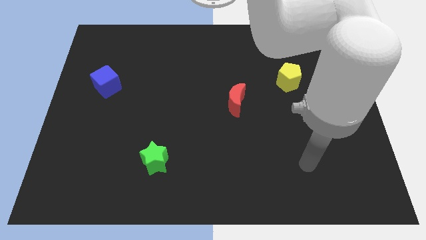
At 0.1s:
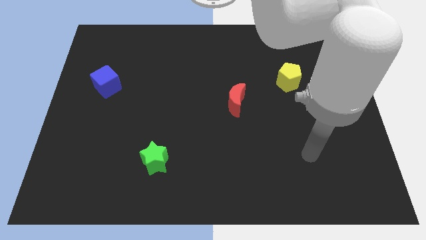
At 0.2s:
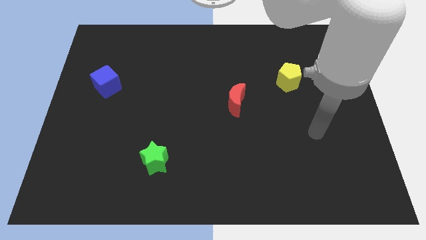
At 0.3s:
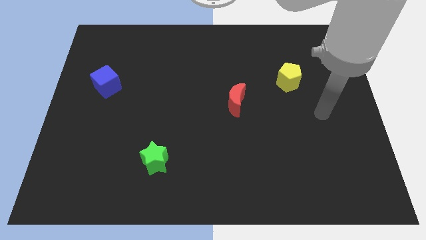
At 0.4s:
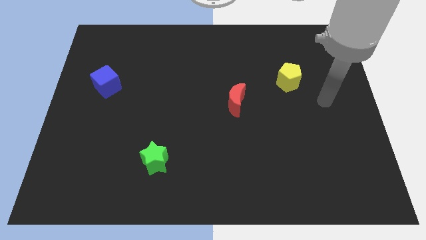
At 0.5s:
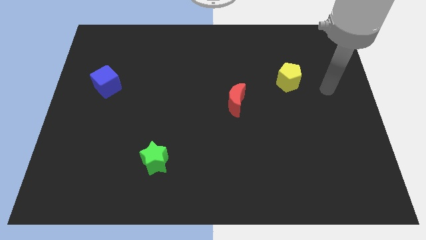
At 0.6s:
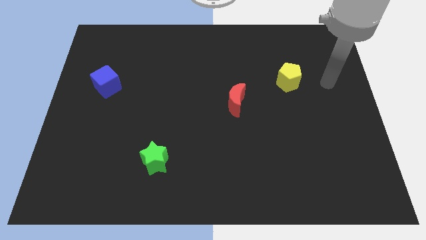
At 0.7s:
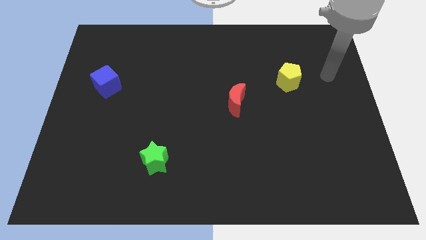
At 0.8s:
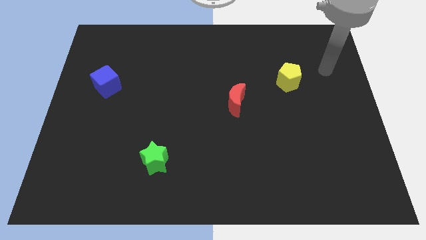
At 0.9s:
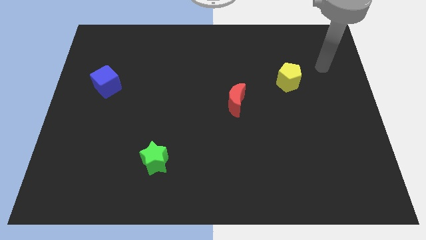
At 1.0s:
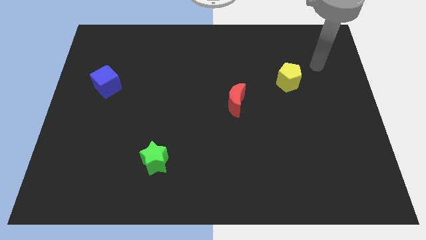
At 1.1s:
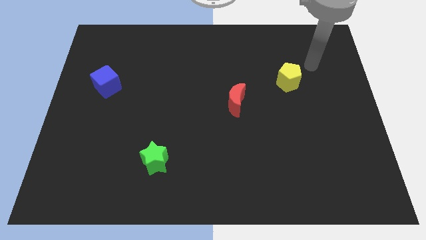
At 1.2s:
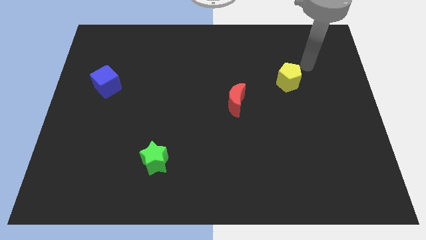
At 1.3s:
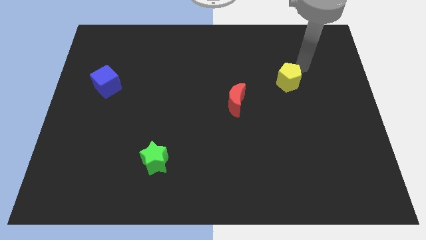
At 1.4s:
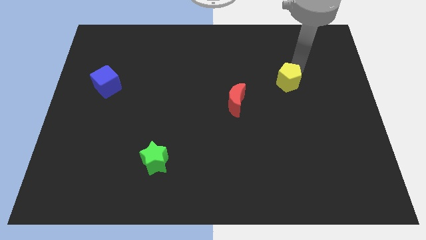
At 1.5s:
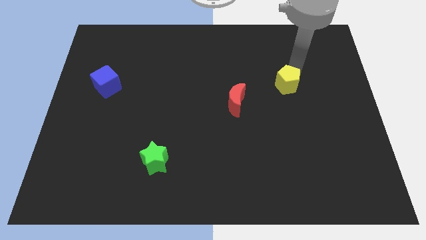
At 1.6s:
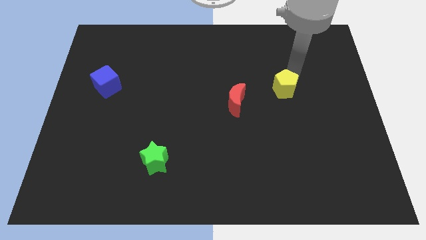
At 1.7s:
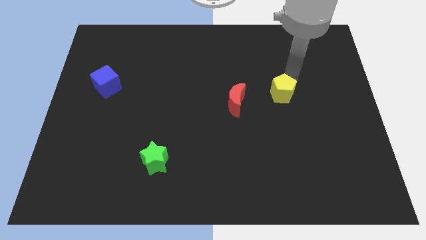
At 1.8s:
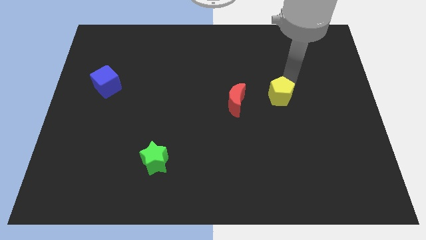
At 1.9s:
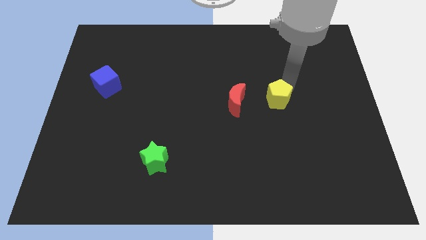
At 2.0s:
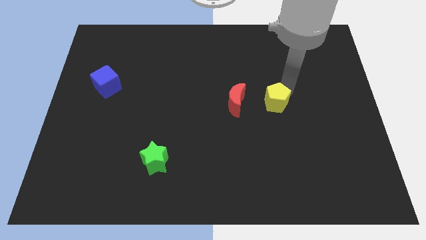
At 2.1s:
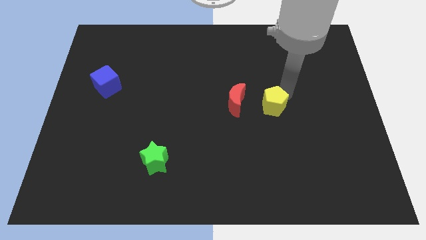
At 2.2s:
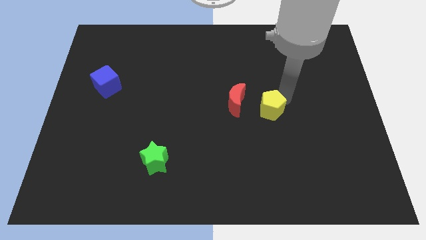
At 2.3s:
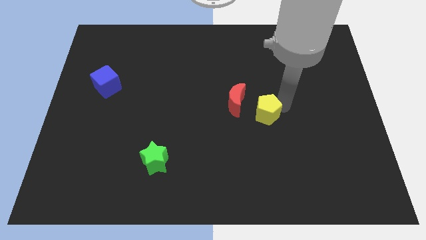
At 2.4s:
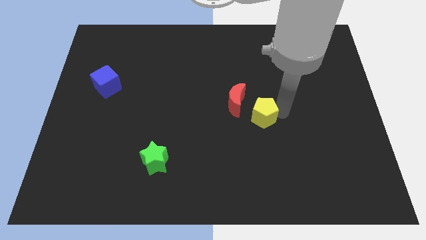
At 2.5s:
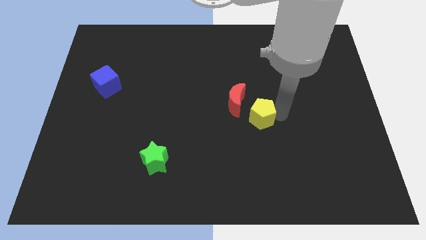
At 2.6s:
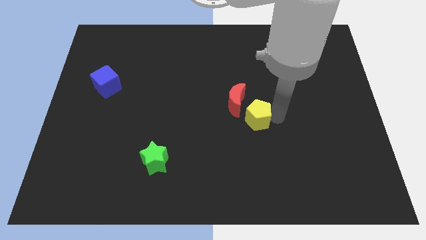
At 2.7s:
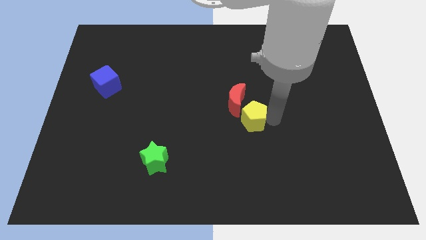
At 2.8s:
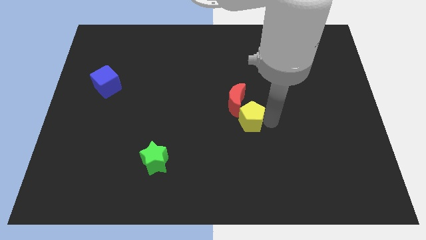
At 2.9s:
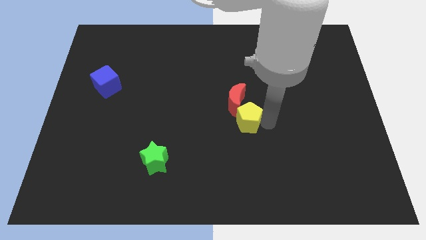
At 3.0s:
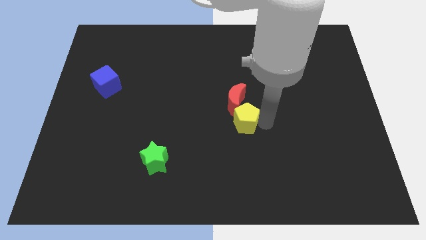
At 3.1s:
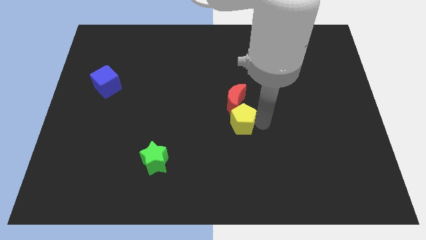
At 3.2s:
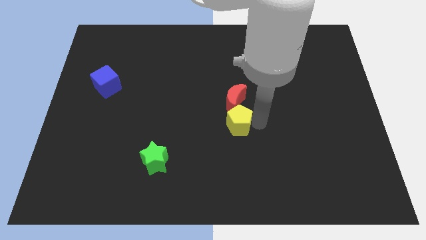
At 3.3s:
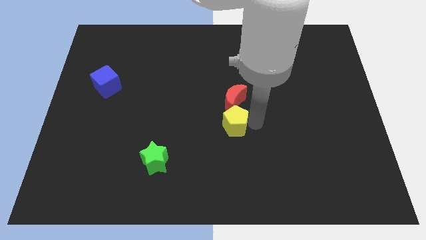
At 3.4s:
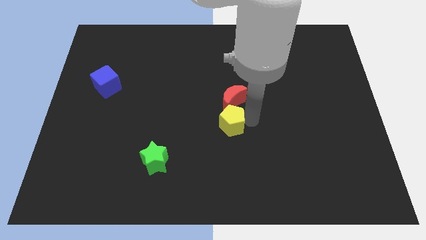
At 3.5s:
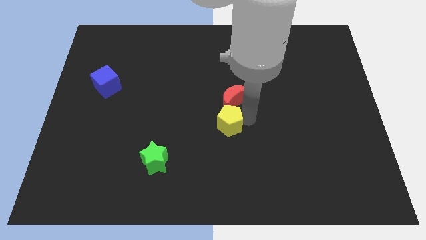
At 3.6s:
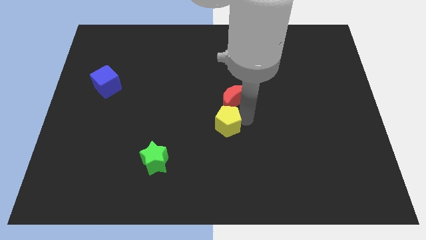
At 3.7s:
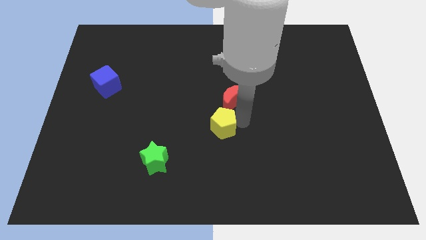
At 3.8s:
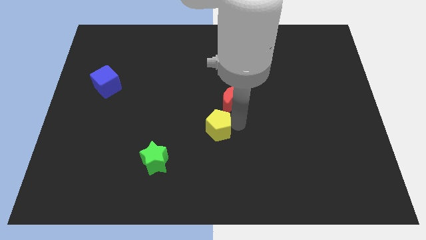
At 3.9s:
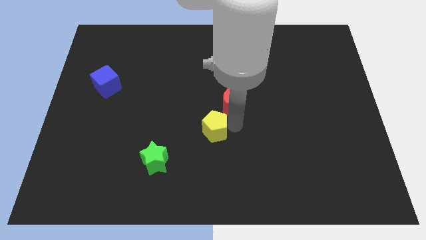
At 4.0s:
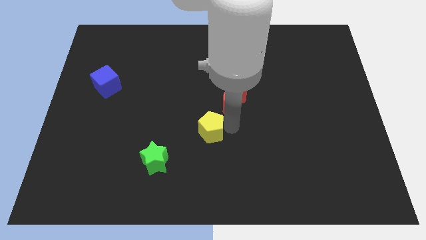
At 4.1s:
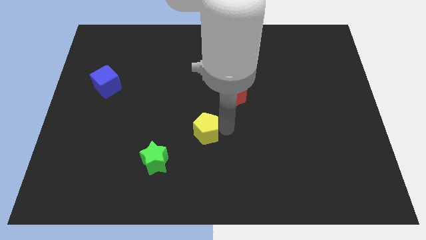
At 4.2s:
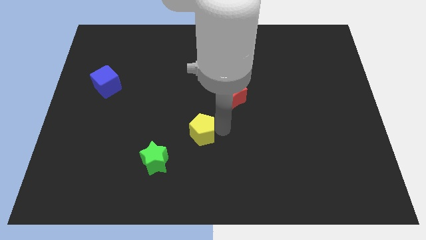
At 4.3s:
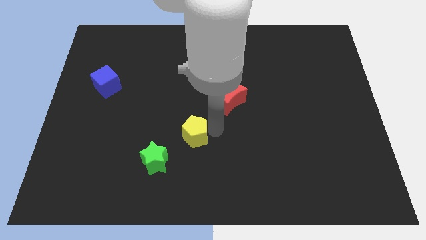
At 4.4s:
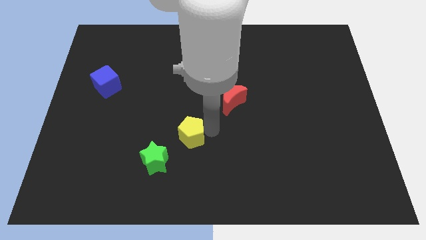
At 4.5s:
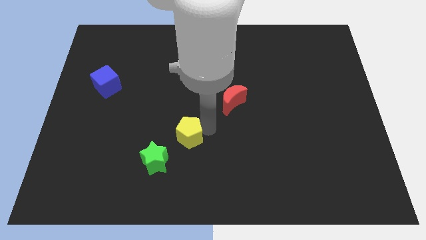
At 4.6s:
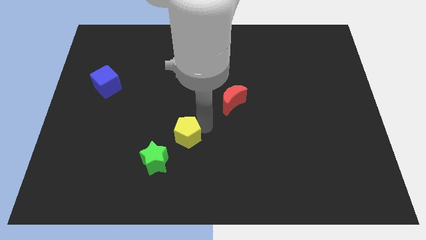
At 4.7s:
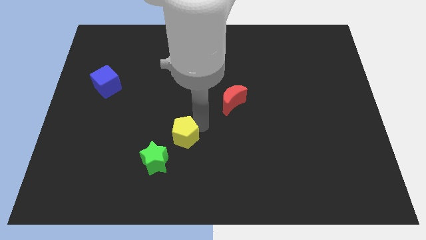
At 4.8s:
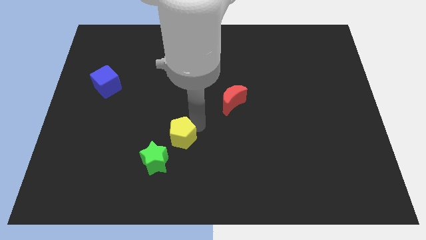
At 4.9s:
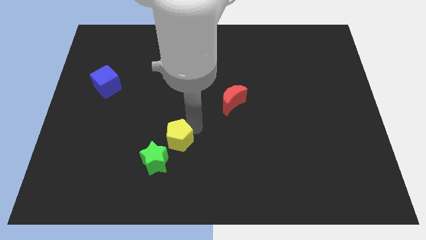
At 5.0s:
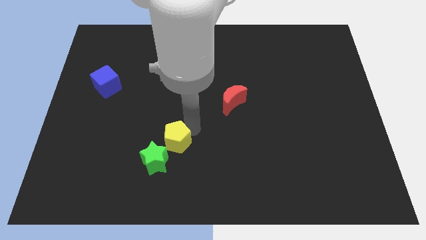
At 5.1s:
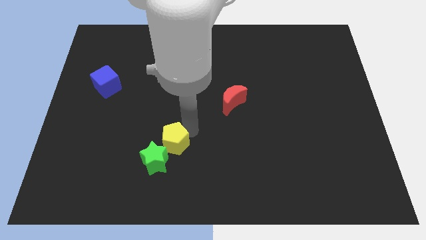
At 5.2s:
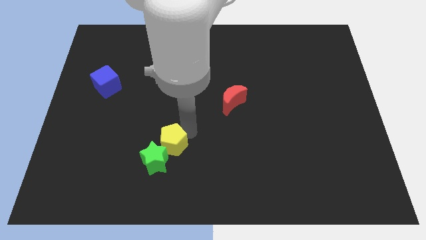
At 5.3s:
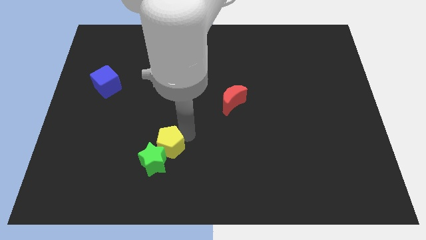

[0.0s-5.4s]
slide the yellow pentagon to the green star

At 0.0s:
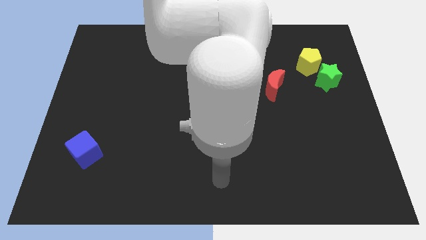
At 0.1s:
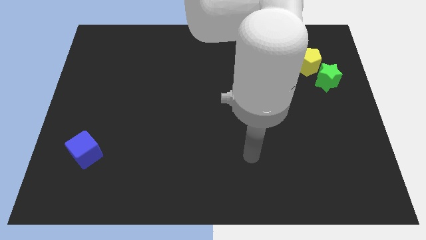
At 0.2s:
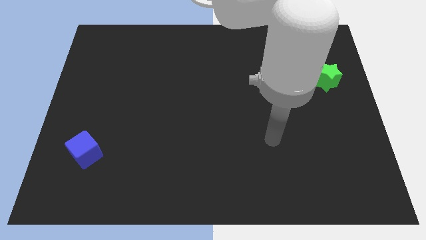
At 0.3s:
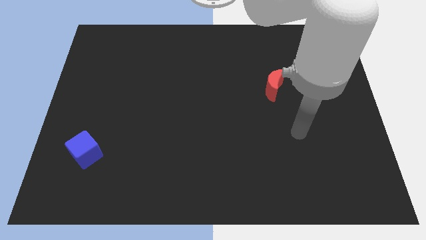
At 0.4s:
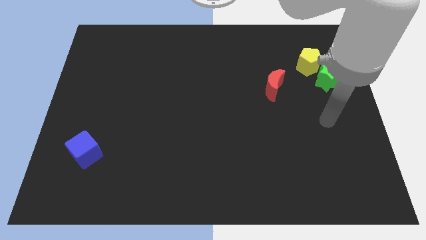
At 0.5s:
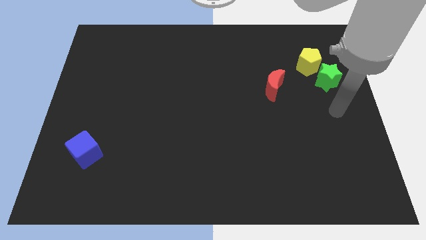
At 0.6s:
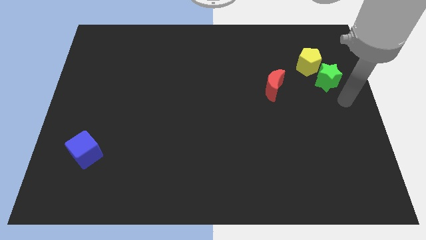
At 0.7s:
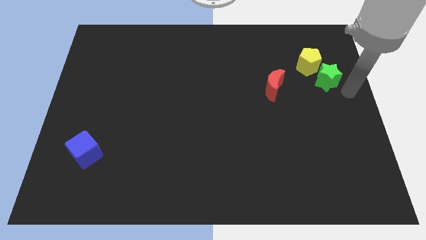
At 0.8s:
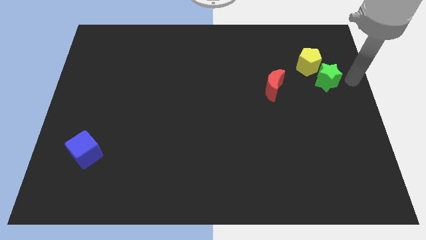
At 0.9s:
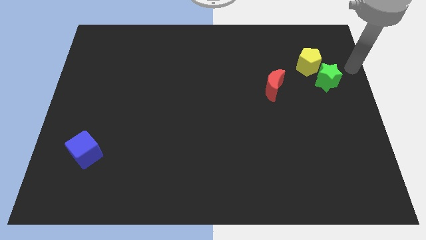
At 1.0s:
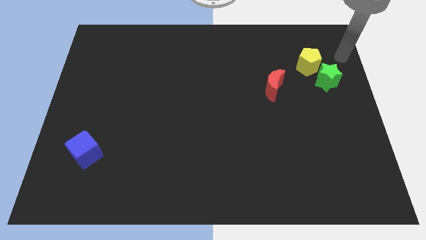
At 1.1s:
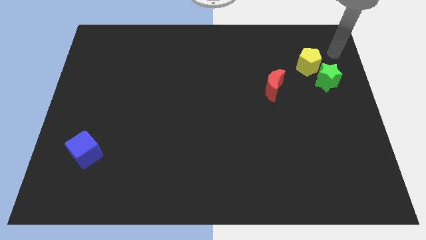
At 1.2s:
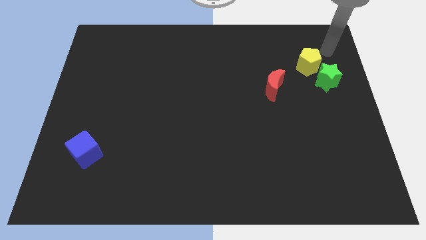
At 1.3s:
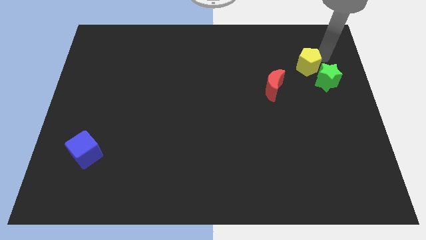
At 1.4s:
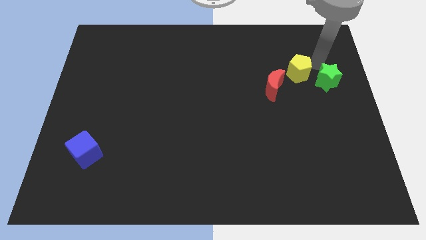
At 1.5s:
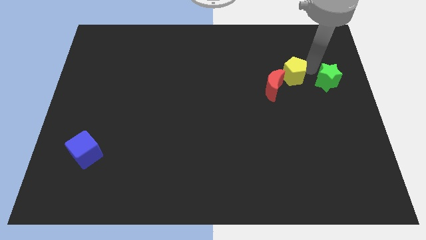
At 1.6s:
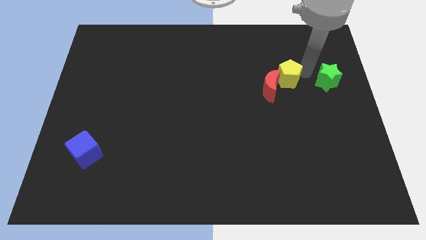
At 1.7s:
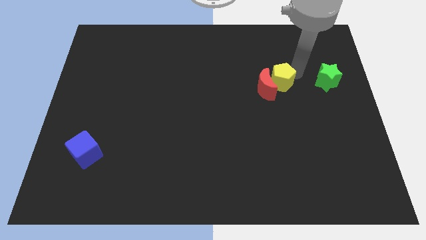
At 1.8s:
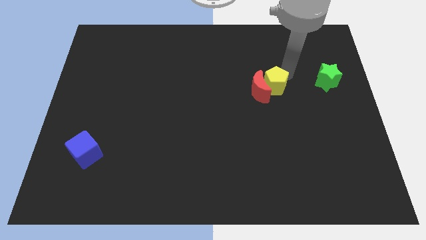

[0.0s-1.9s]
slide the pentagon to the moon

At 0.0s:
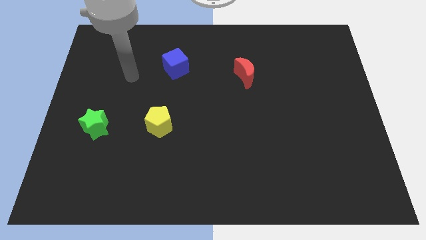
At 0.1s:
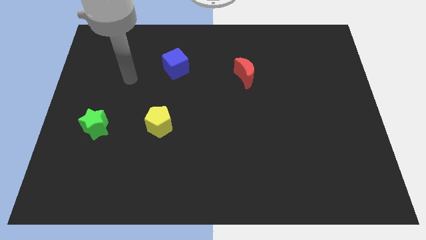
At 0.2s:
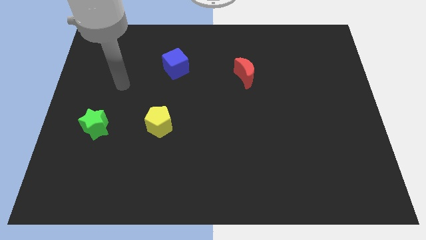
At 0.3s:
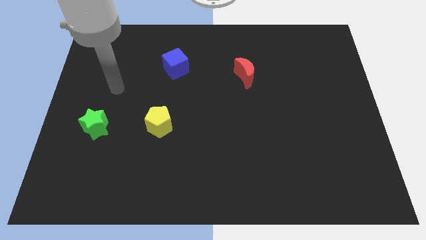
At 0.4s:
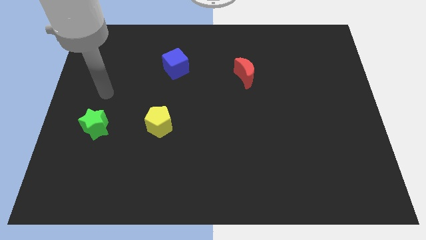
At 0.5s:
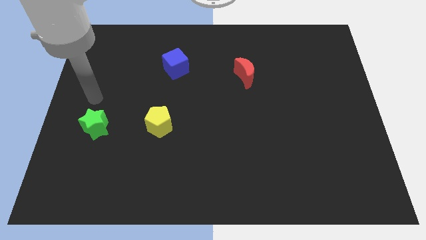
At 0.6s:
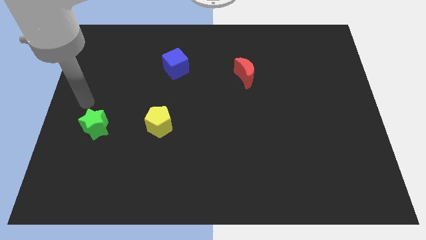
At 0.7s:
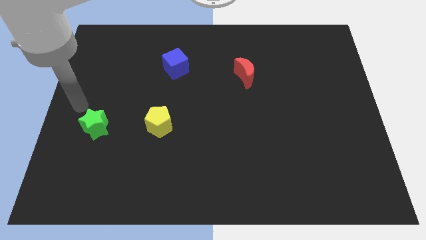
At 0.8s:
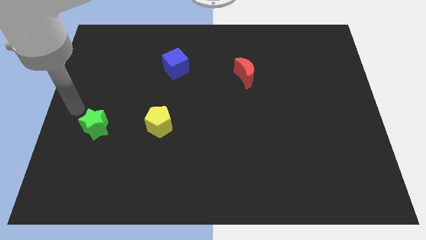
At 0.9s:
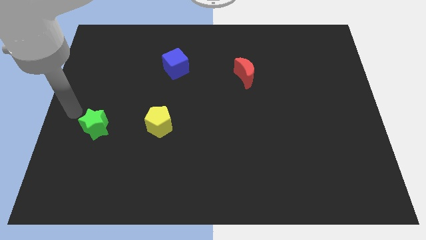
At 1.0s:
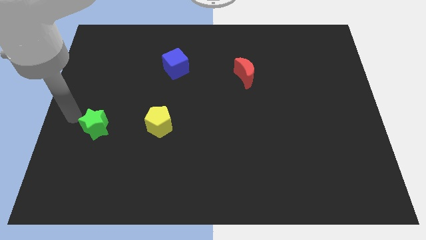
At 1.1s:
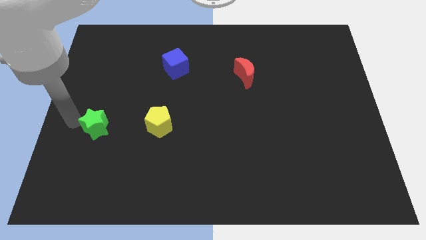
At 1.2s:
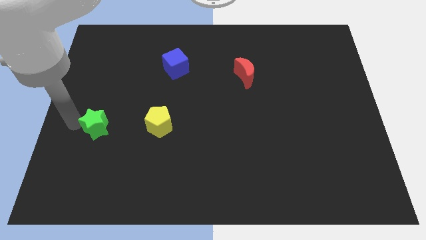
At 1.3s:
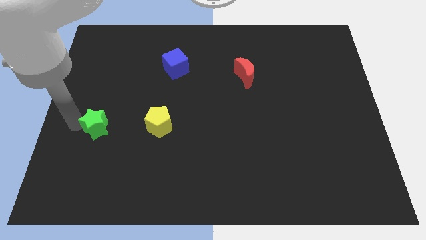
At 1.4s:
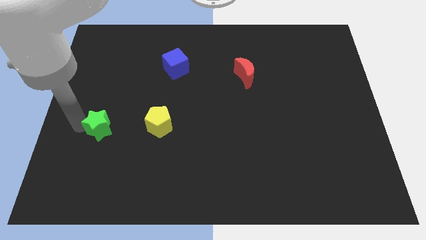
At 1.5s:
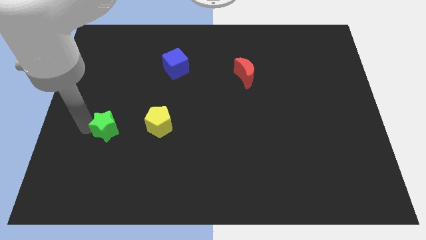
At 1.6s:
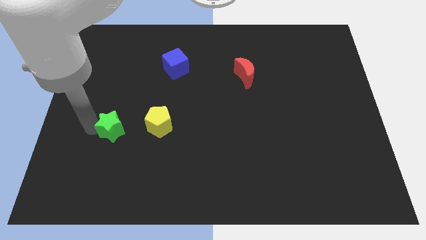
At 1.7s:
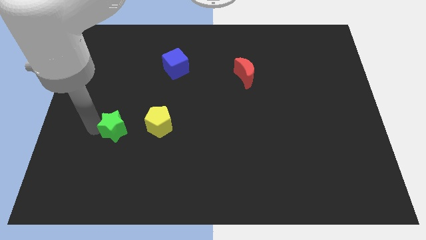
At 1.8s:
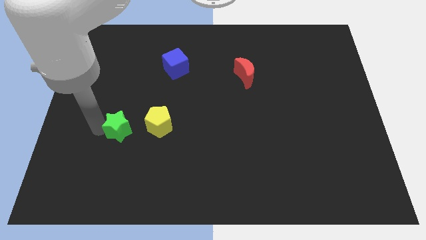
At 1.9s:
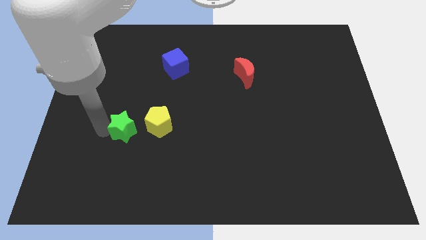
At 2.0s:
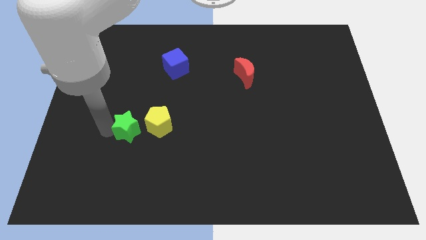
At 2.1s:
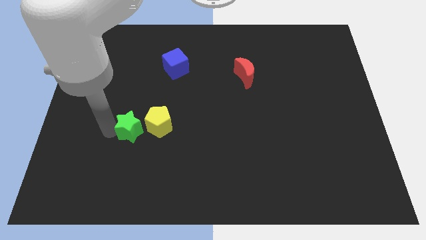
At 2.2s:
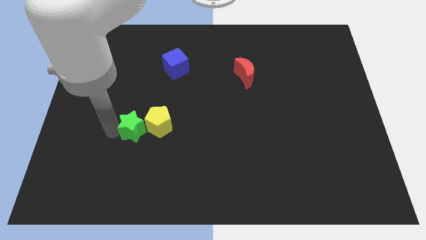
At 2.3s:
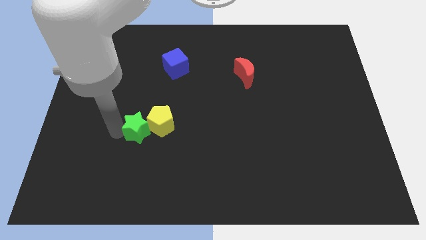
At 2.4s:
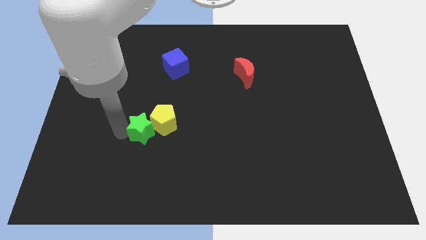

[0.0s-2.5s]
put the green block next to the pentagon
